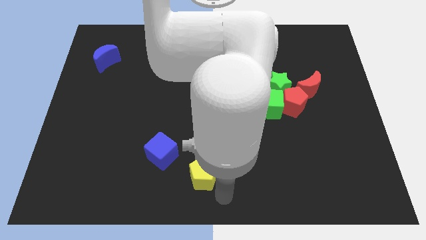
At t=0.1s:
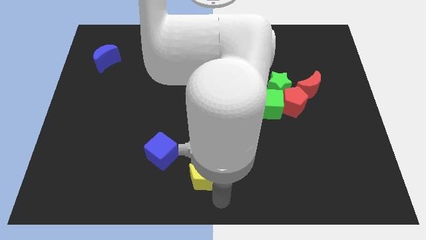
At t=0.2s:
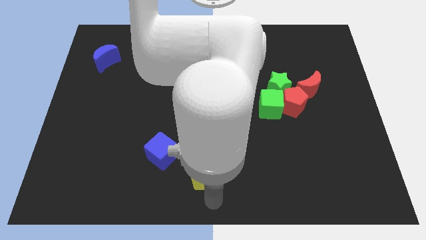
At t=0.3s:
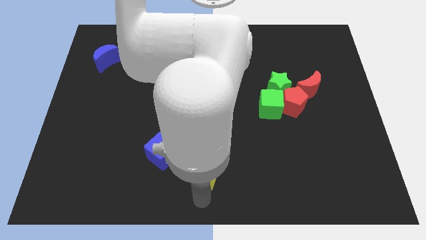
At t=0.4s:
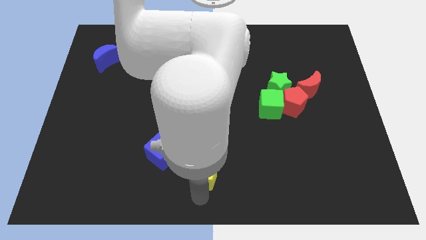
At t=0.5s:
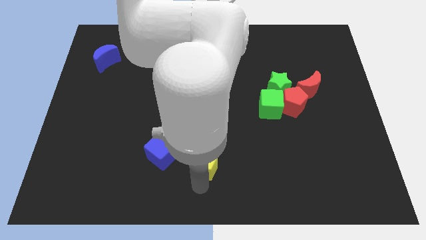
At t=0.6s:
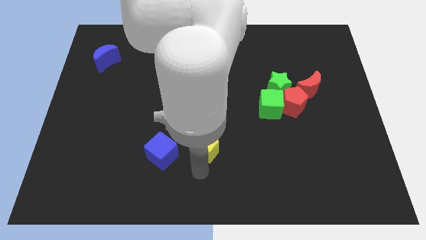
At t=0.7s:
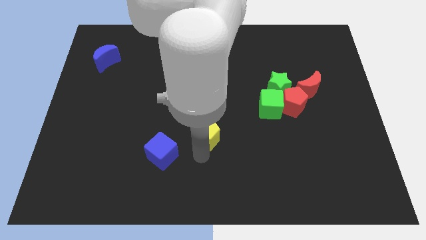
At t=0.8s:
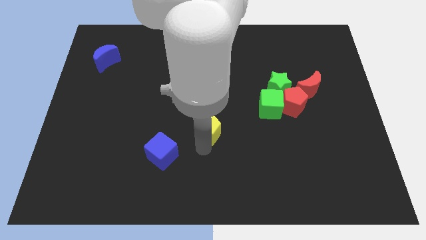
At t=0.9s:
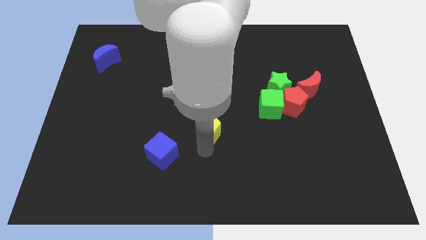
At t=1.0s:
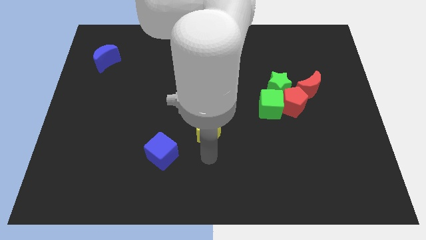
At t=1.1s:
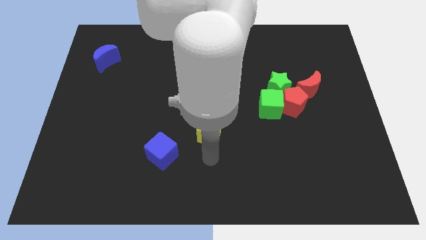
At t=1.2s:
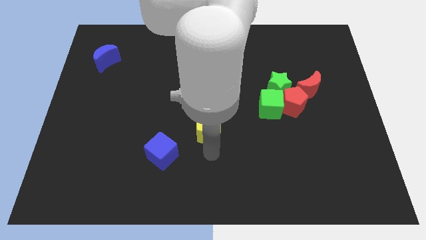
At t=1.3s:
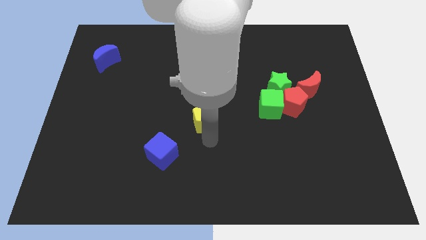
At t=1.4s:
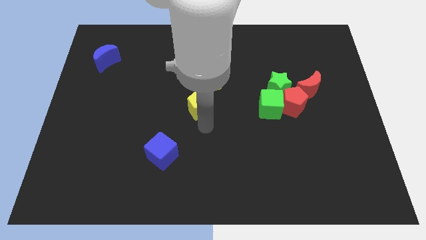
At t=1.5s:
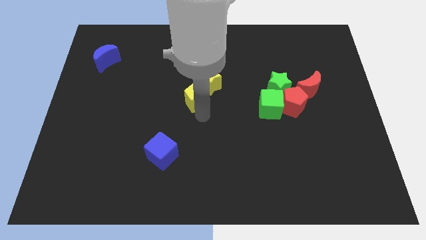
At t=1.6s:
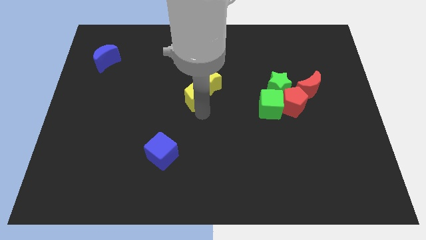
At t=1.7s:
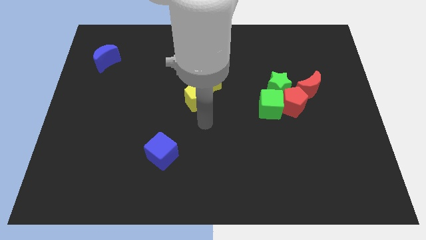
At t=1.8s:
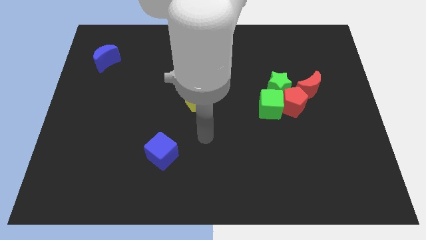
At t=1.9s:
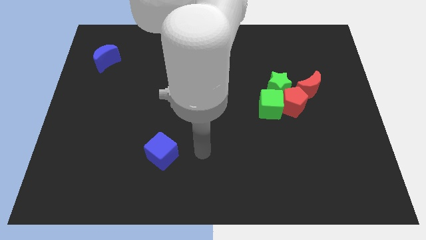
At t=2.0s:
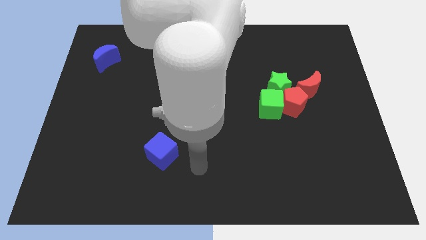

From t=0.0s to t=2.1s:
push the yellow pentagon close to the yellow star

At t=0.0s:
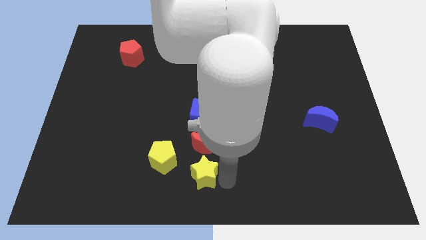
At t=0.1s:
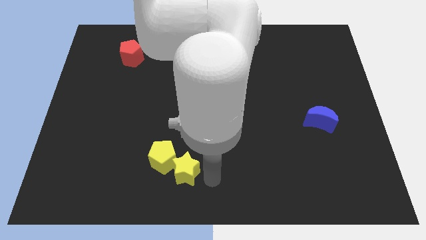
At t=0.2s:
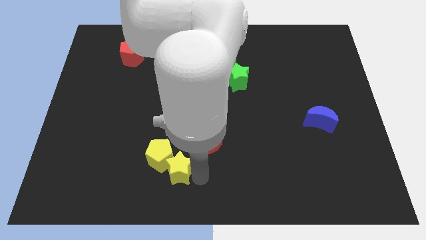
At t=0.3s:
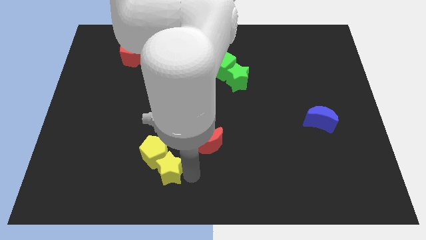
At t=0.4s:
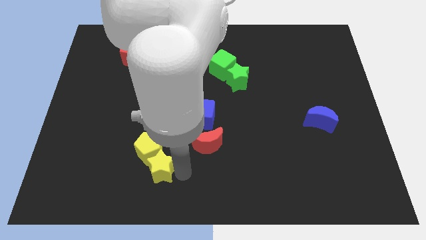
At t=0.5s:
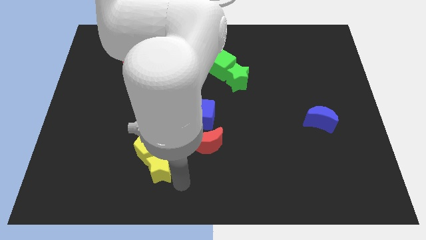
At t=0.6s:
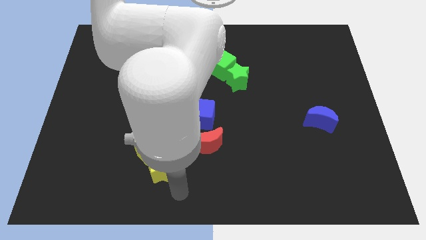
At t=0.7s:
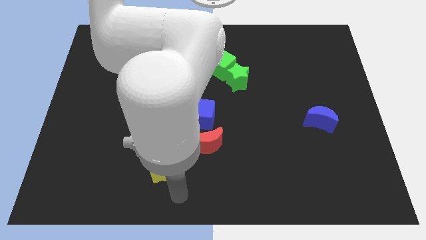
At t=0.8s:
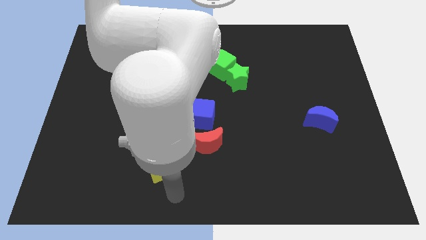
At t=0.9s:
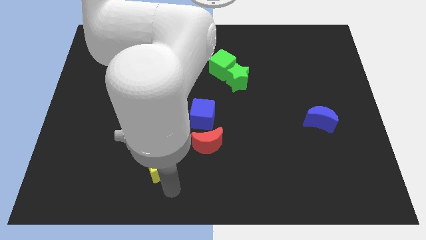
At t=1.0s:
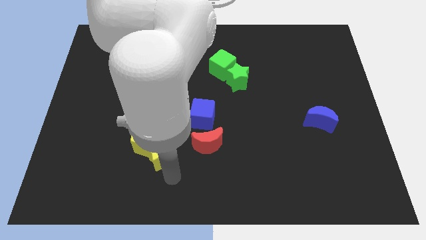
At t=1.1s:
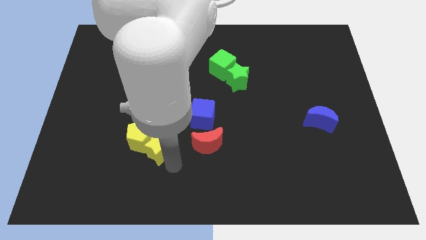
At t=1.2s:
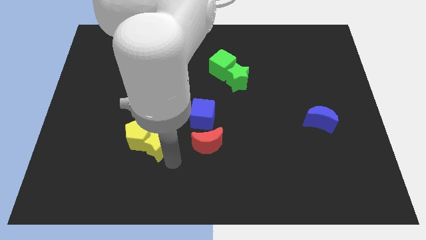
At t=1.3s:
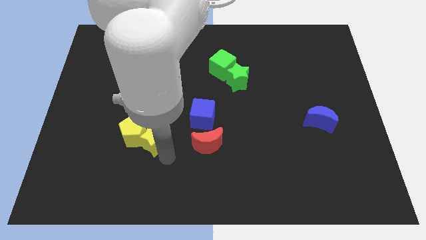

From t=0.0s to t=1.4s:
push the yellow star into the yellow pentagon

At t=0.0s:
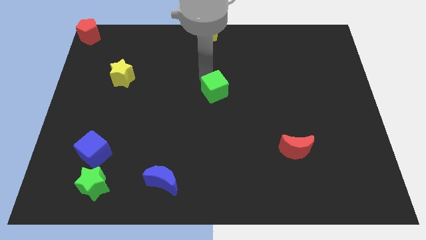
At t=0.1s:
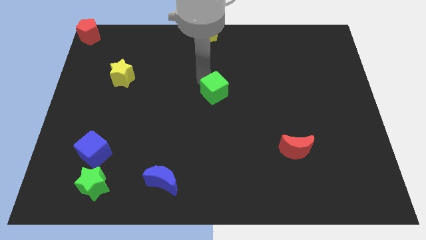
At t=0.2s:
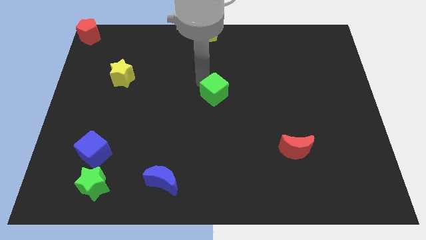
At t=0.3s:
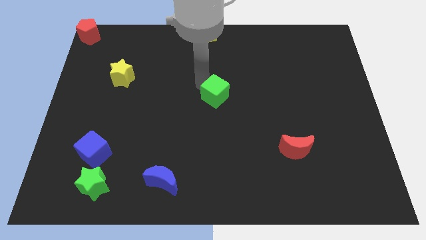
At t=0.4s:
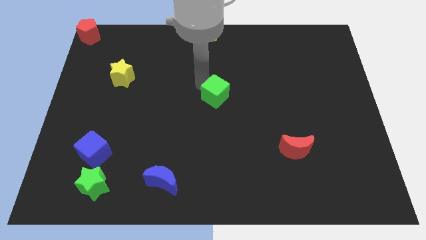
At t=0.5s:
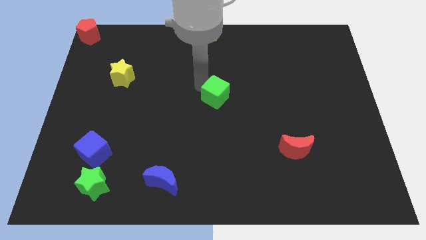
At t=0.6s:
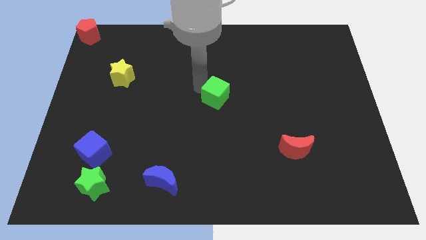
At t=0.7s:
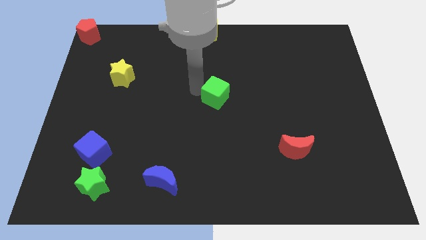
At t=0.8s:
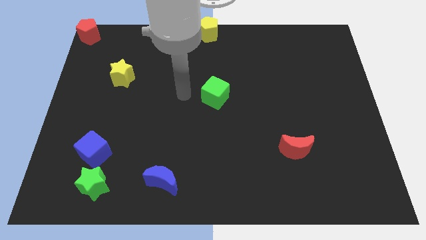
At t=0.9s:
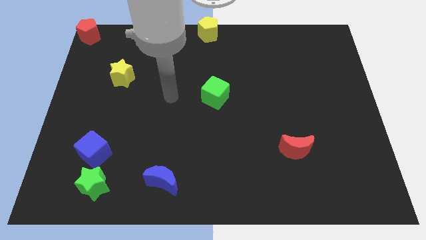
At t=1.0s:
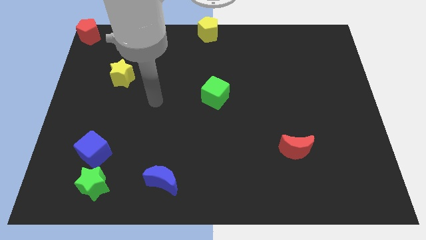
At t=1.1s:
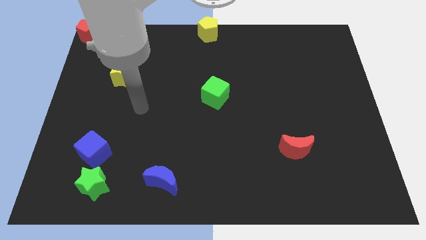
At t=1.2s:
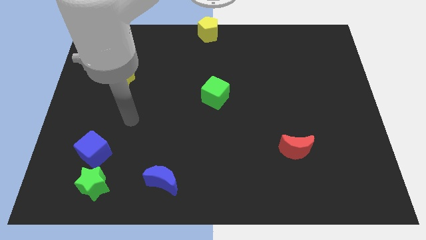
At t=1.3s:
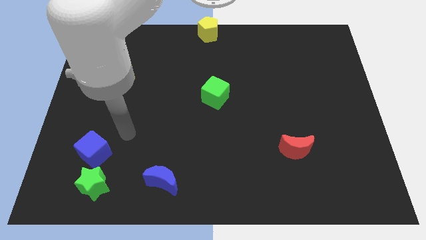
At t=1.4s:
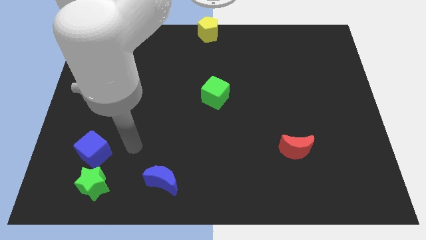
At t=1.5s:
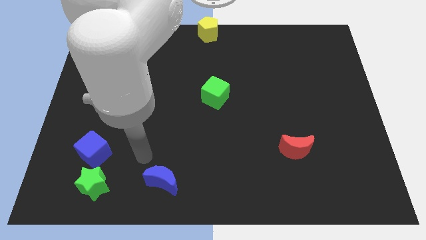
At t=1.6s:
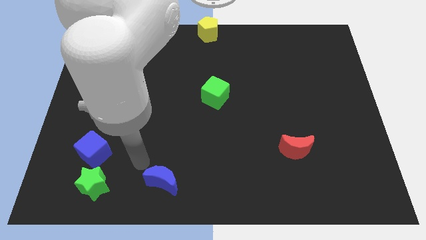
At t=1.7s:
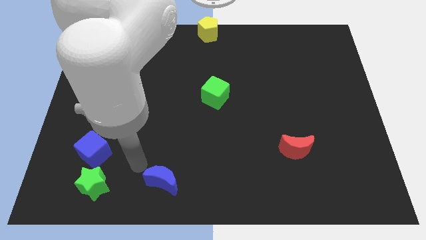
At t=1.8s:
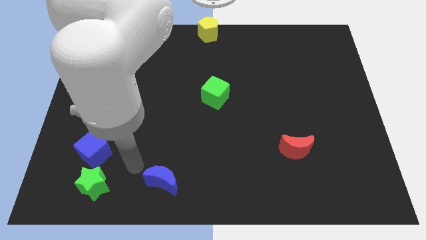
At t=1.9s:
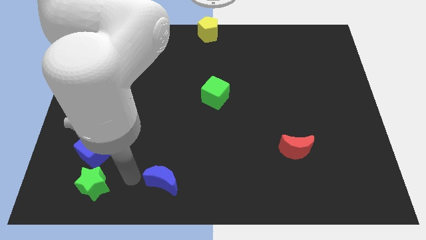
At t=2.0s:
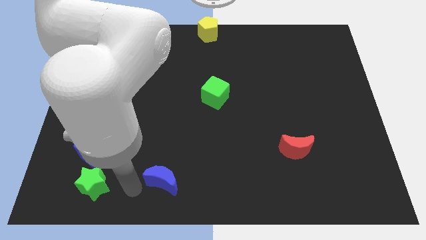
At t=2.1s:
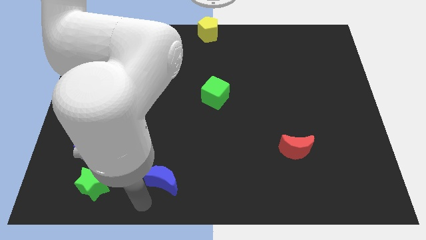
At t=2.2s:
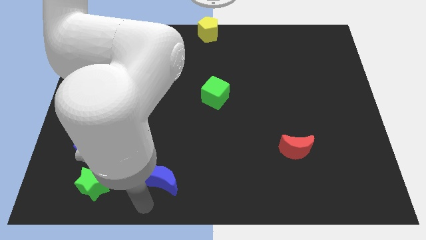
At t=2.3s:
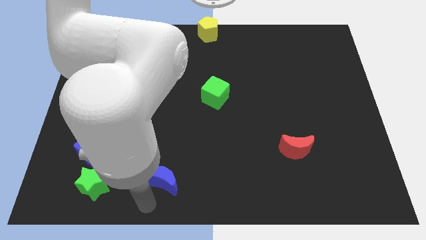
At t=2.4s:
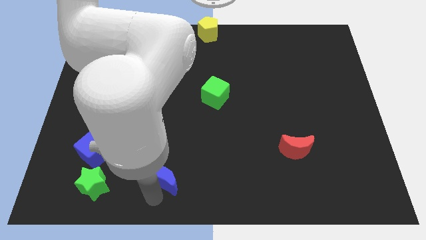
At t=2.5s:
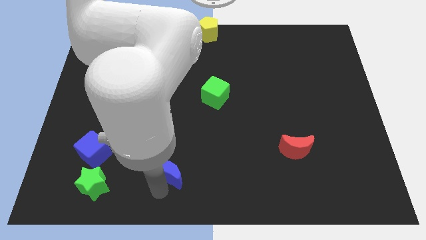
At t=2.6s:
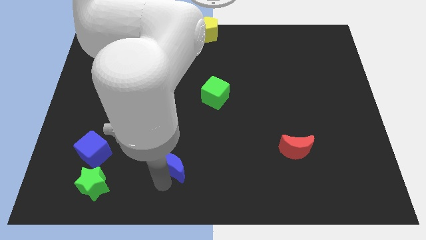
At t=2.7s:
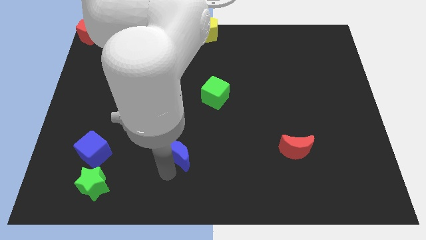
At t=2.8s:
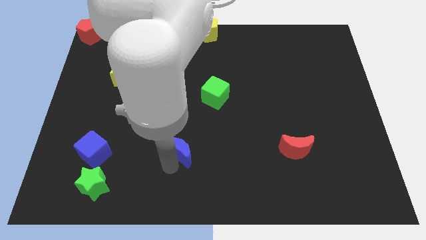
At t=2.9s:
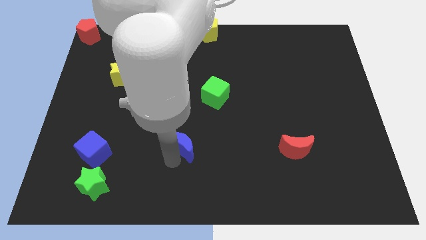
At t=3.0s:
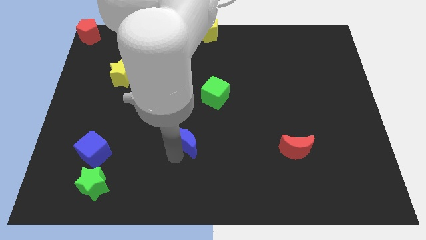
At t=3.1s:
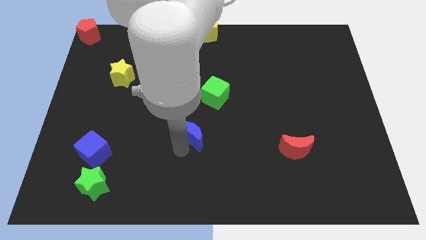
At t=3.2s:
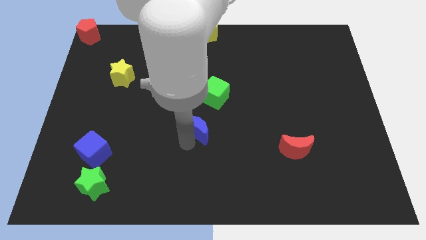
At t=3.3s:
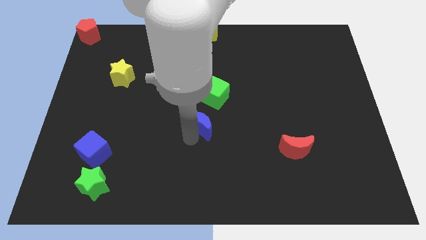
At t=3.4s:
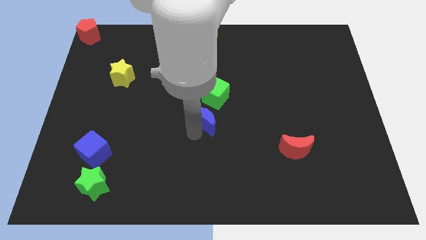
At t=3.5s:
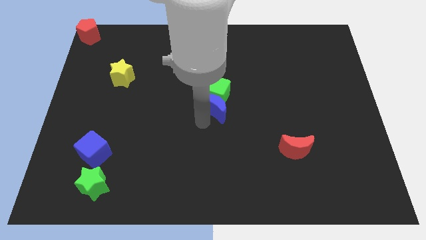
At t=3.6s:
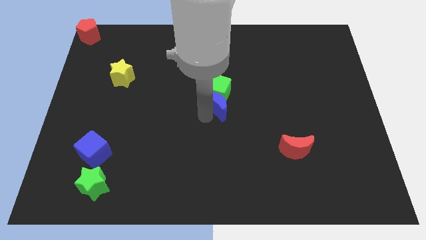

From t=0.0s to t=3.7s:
place the blue crescent and green cube at the center of the board

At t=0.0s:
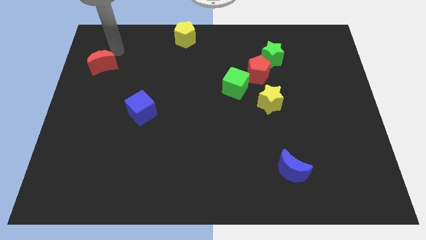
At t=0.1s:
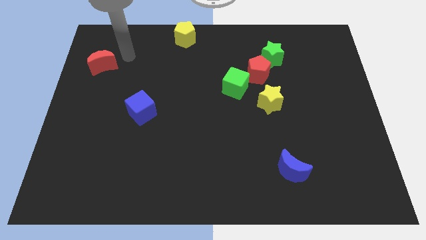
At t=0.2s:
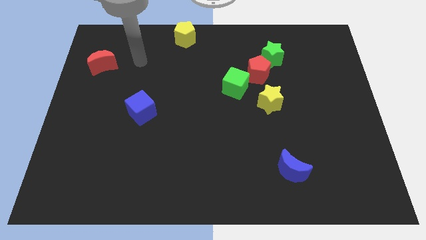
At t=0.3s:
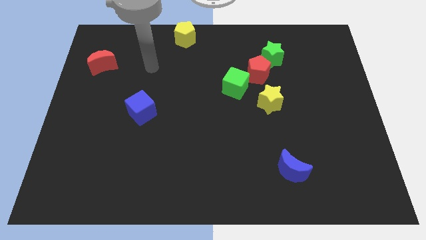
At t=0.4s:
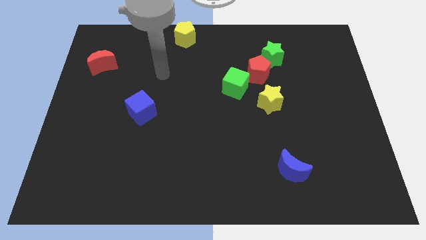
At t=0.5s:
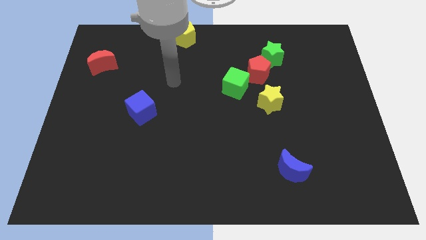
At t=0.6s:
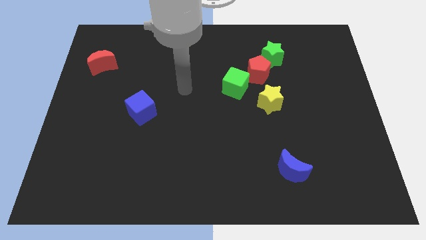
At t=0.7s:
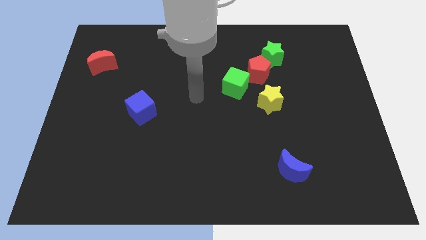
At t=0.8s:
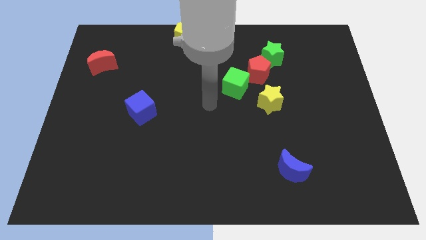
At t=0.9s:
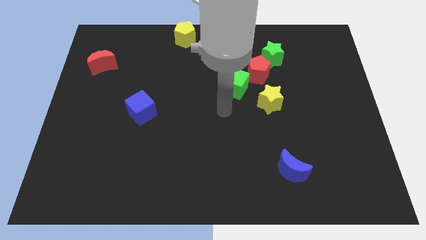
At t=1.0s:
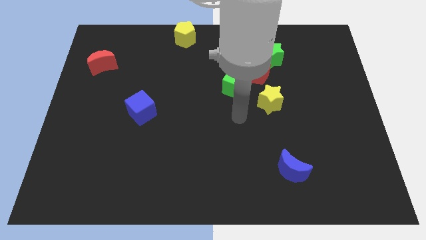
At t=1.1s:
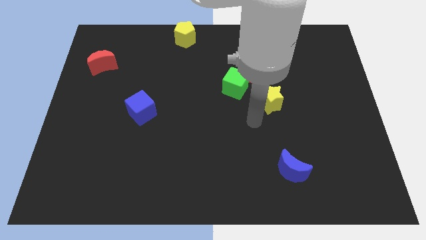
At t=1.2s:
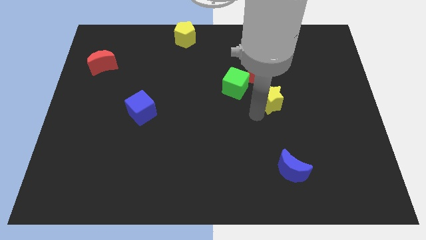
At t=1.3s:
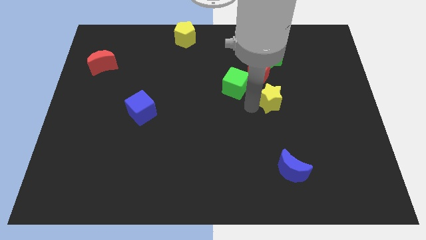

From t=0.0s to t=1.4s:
tap the yellow star

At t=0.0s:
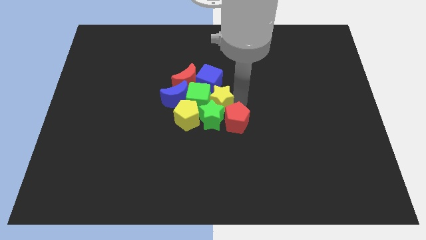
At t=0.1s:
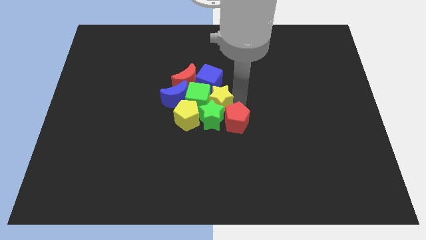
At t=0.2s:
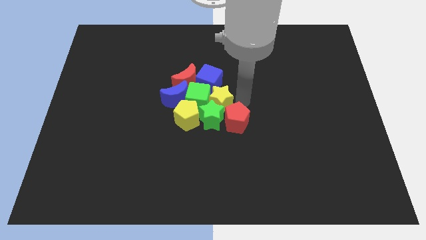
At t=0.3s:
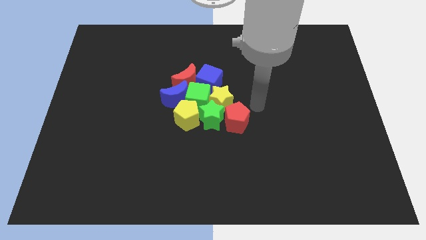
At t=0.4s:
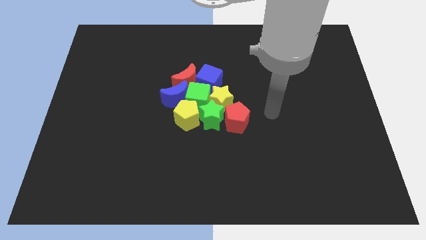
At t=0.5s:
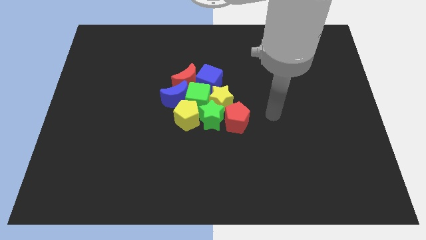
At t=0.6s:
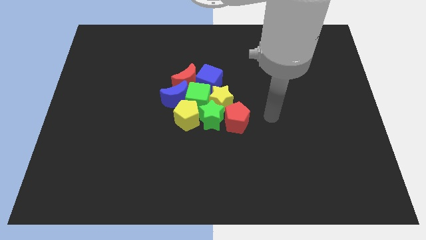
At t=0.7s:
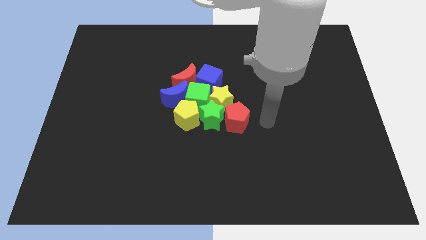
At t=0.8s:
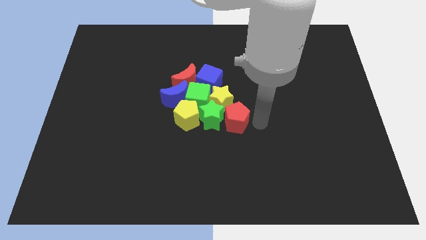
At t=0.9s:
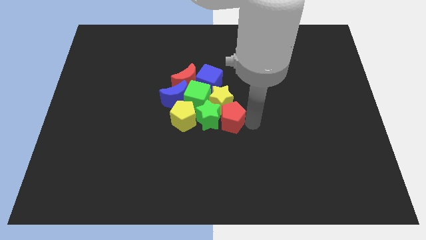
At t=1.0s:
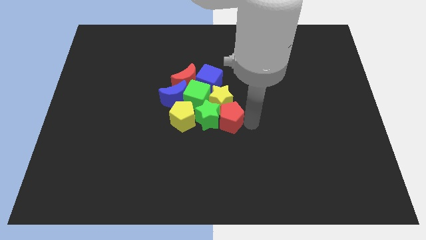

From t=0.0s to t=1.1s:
place the arm right to the red pentagon
